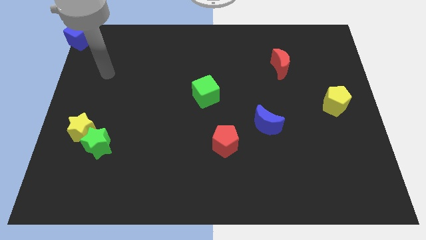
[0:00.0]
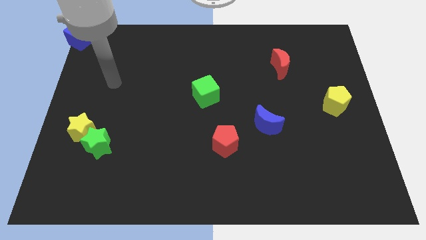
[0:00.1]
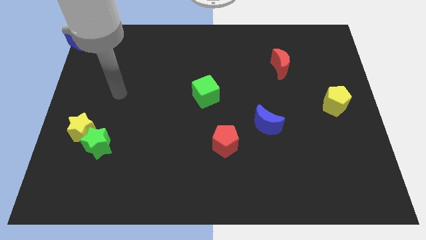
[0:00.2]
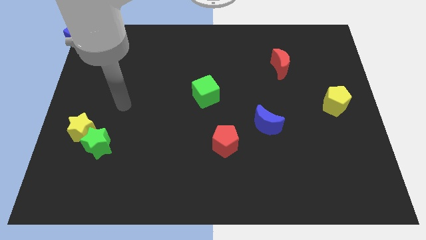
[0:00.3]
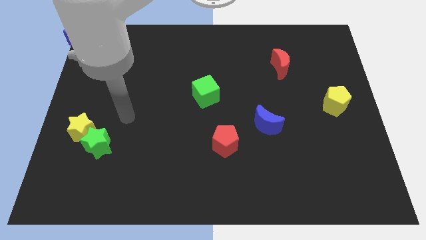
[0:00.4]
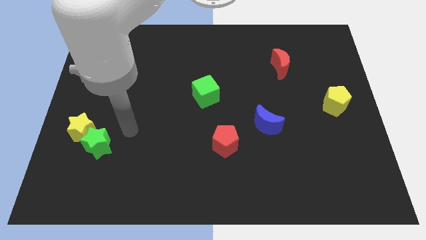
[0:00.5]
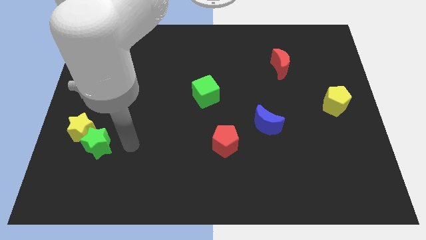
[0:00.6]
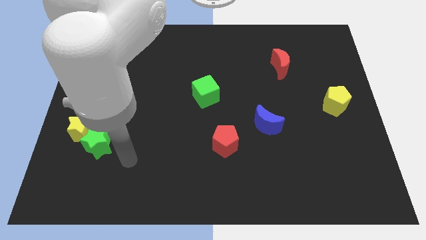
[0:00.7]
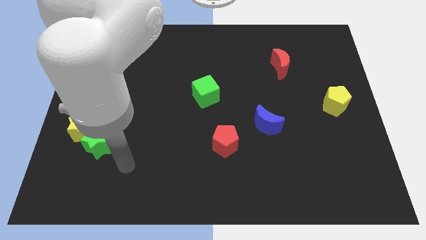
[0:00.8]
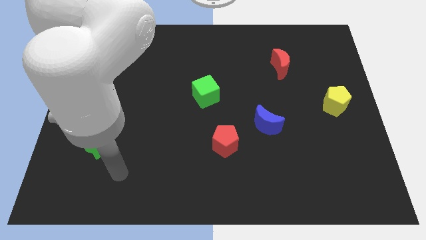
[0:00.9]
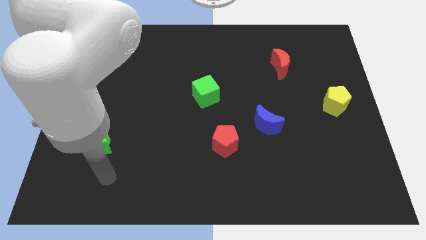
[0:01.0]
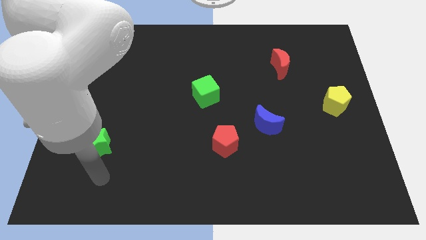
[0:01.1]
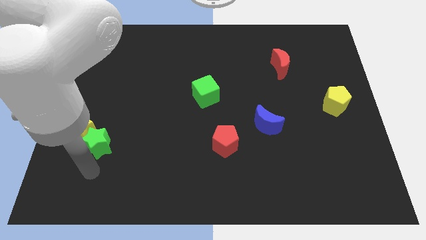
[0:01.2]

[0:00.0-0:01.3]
point your arm at the bottom of the green star

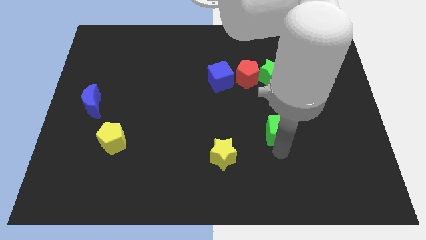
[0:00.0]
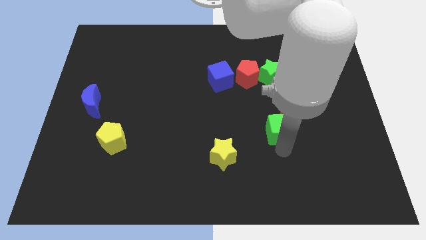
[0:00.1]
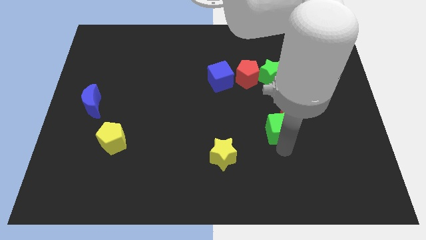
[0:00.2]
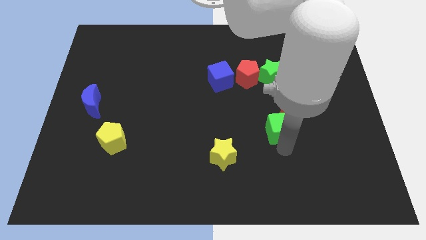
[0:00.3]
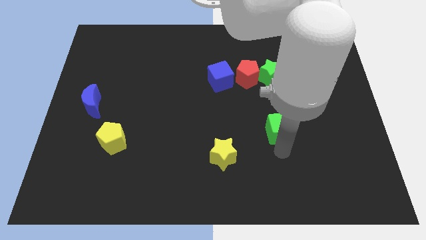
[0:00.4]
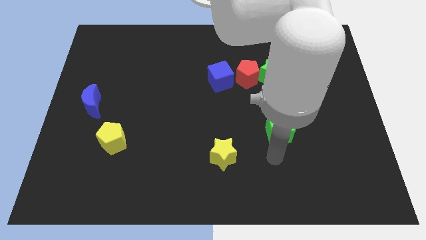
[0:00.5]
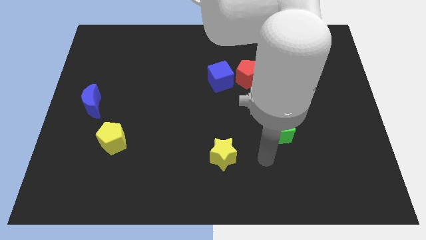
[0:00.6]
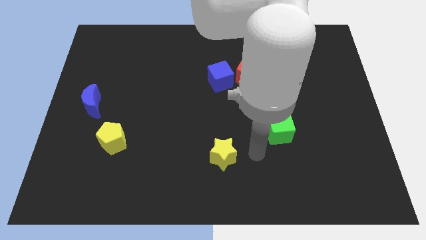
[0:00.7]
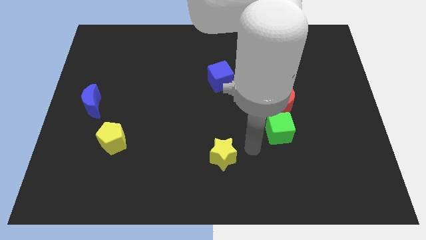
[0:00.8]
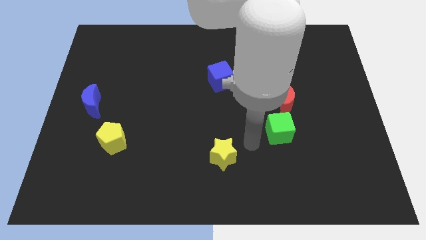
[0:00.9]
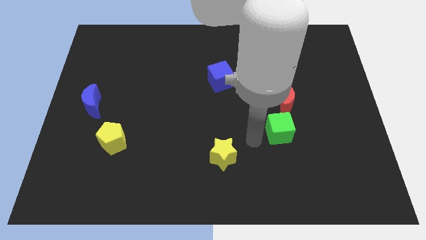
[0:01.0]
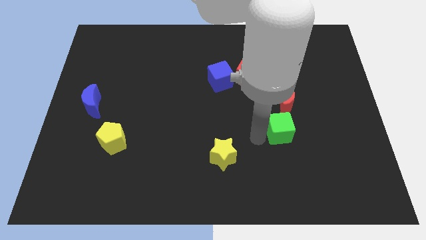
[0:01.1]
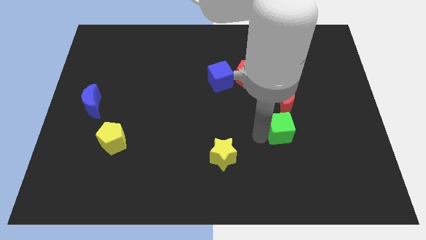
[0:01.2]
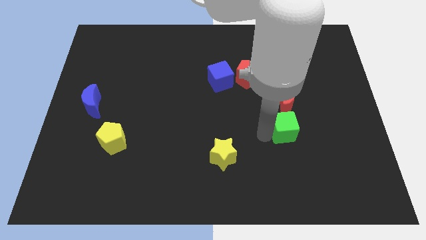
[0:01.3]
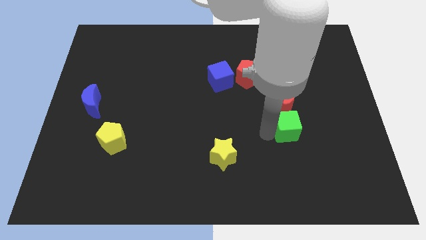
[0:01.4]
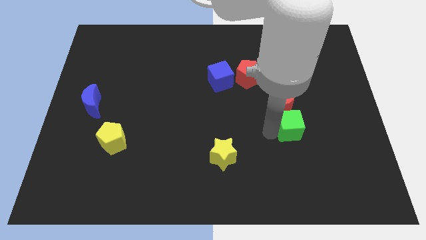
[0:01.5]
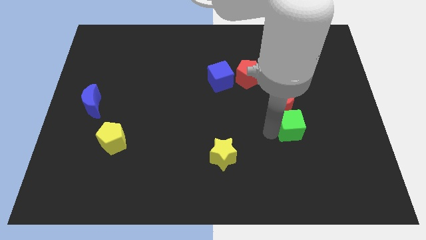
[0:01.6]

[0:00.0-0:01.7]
push the green cube below the red crescent

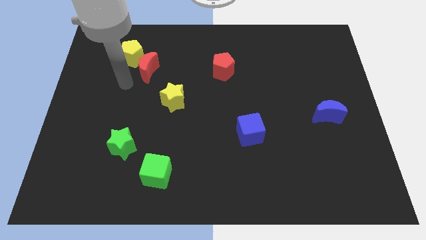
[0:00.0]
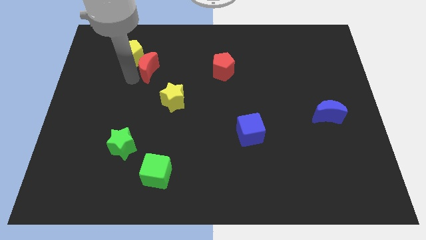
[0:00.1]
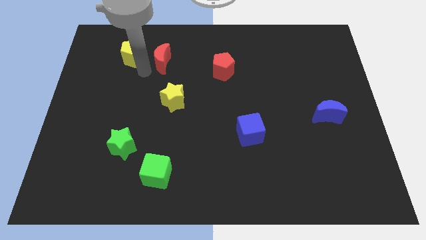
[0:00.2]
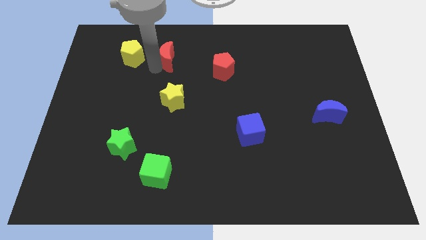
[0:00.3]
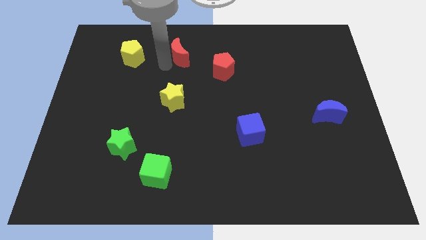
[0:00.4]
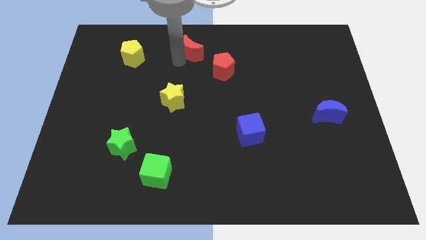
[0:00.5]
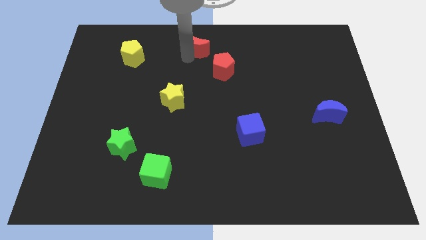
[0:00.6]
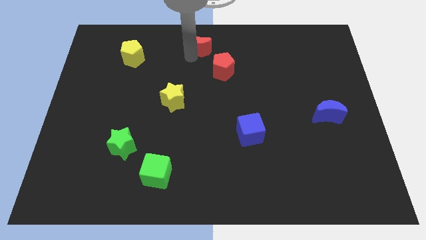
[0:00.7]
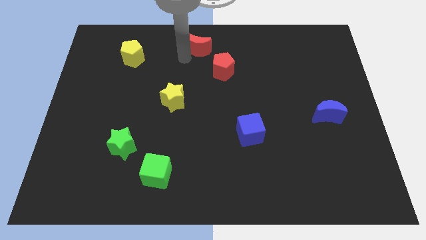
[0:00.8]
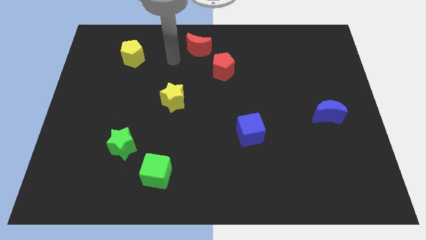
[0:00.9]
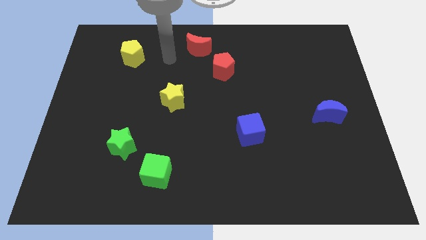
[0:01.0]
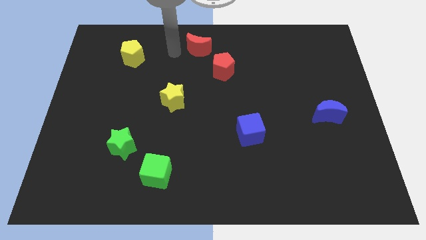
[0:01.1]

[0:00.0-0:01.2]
move the red crescent to the top center of the board

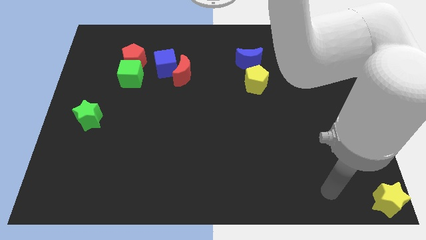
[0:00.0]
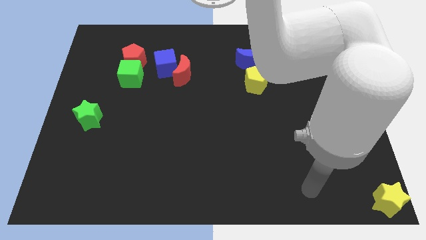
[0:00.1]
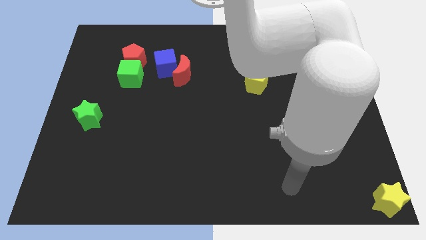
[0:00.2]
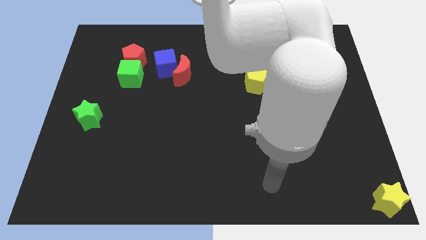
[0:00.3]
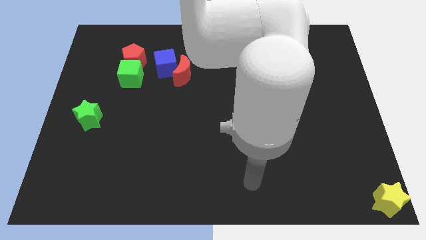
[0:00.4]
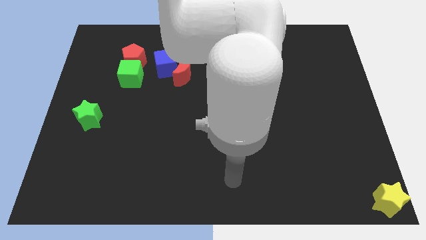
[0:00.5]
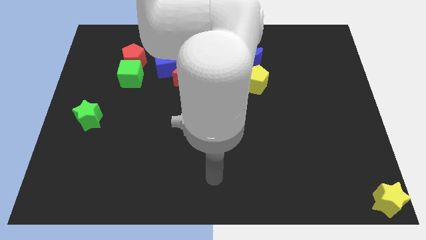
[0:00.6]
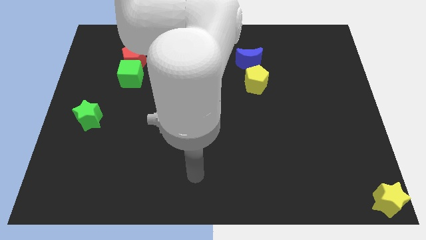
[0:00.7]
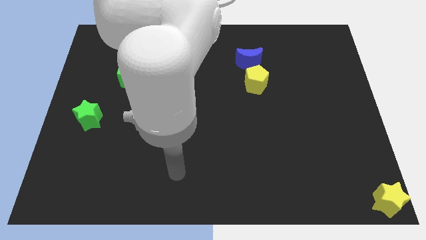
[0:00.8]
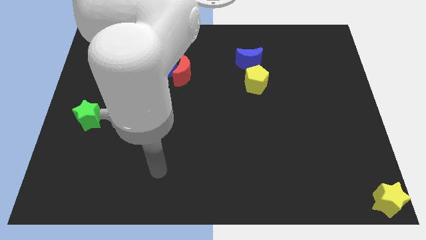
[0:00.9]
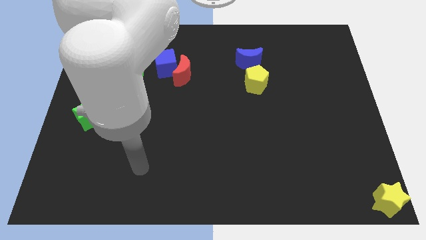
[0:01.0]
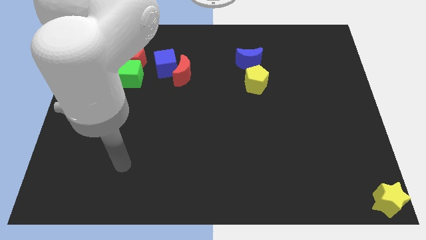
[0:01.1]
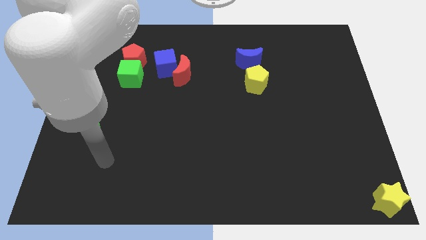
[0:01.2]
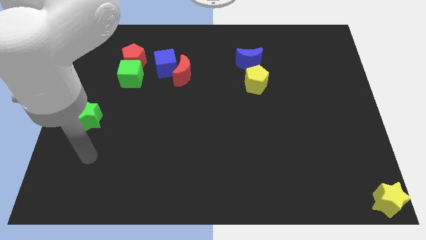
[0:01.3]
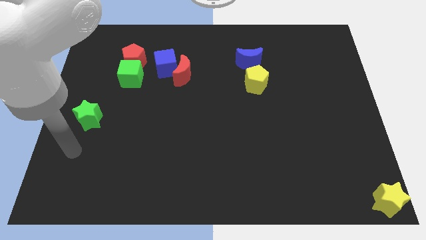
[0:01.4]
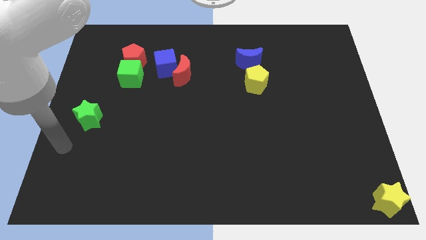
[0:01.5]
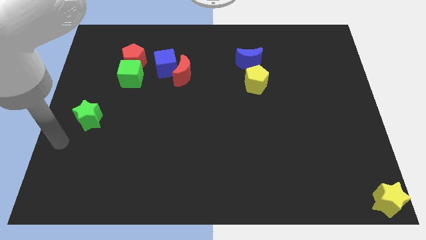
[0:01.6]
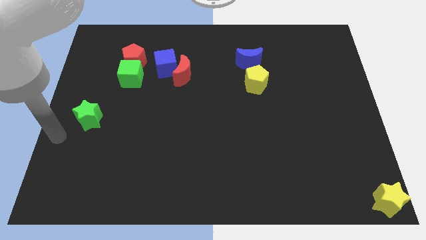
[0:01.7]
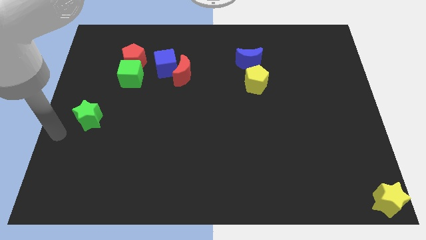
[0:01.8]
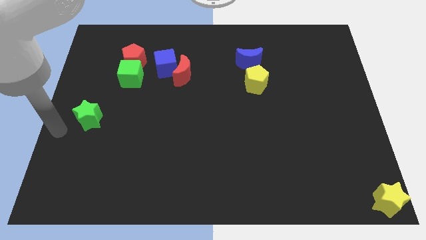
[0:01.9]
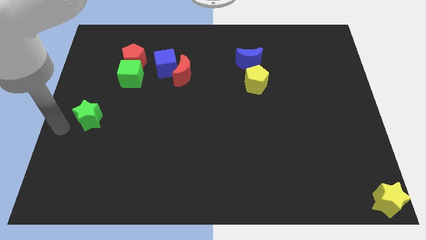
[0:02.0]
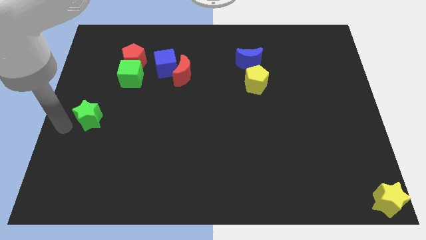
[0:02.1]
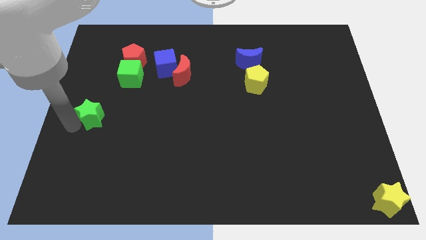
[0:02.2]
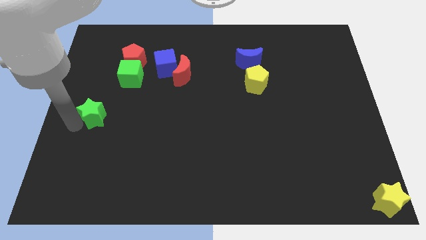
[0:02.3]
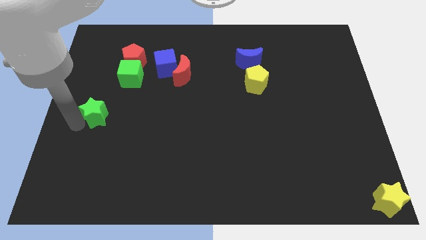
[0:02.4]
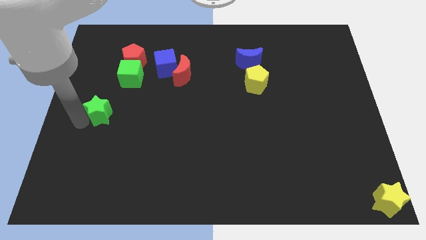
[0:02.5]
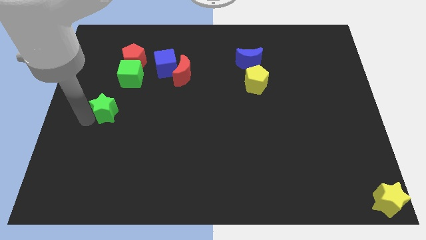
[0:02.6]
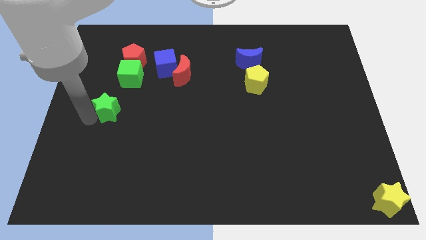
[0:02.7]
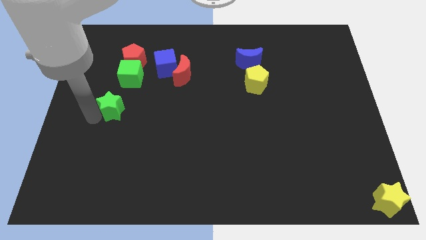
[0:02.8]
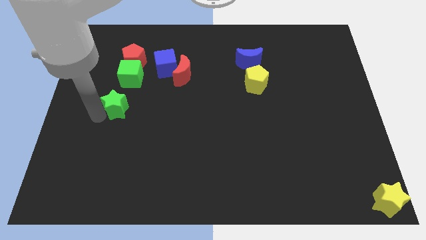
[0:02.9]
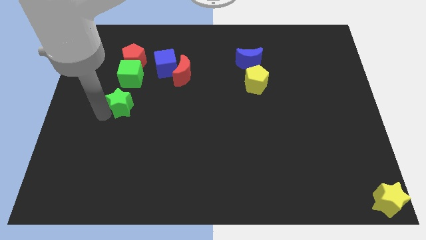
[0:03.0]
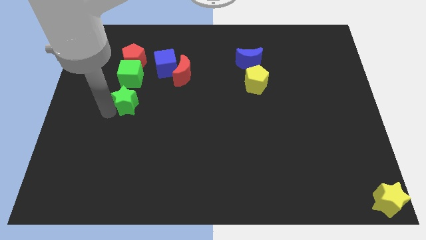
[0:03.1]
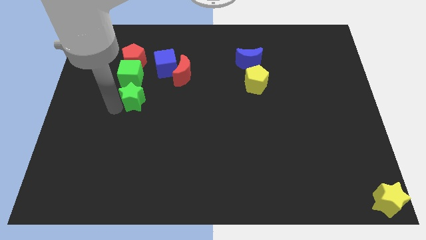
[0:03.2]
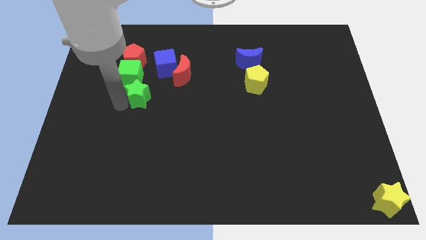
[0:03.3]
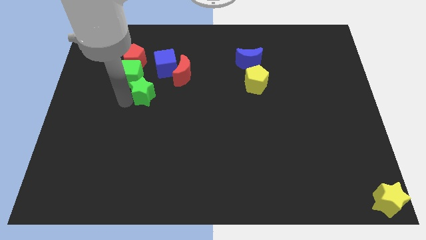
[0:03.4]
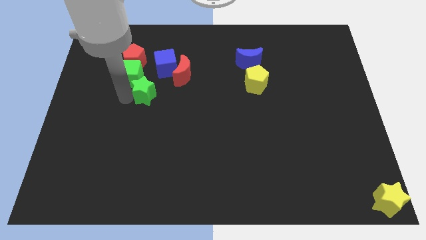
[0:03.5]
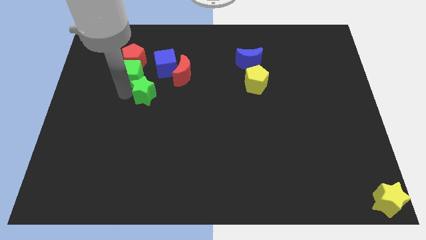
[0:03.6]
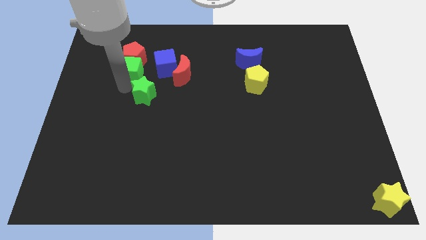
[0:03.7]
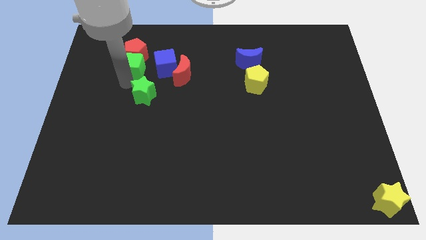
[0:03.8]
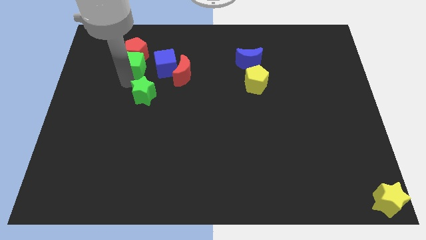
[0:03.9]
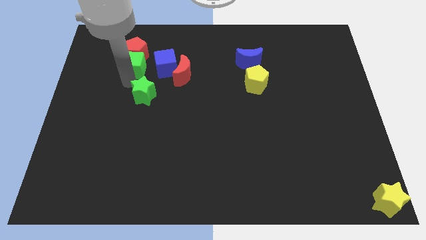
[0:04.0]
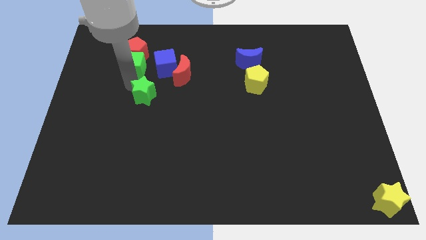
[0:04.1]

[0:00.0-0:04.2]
move the green star to the bottom of the green cube

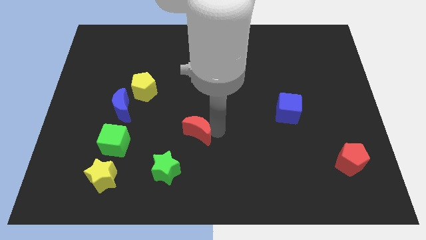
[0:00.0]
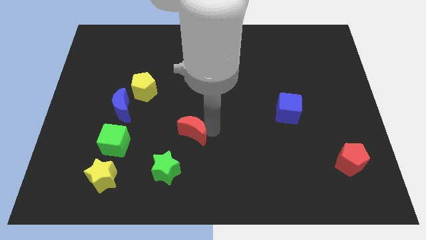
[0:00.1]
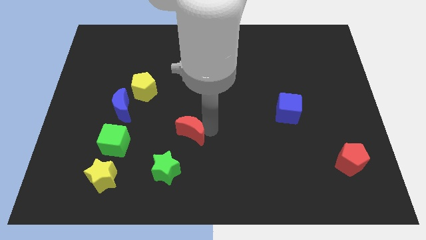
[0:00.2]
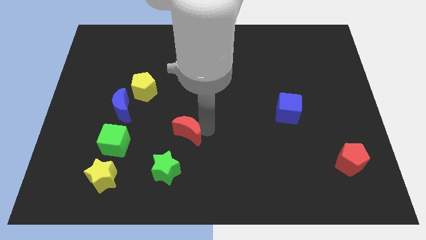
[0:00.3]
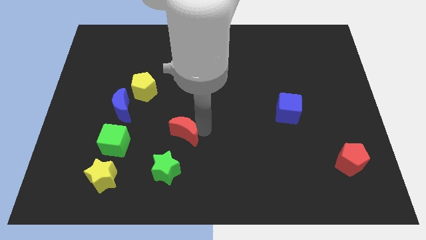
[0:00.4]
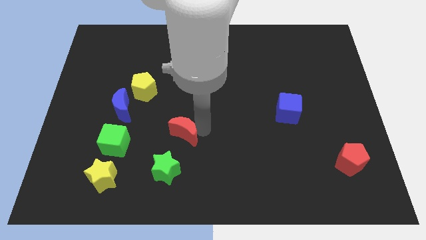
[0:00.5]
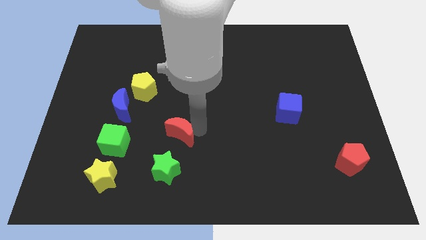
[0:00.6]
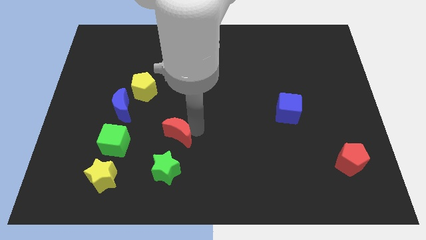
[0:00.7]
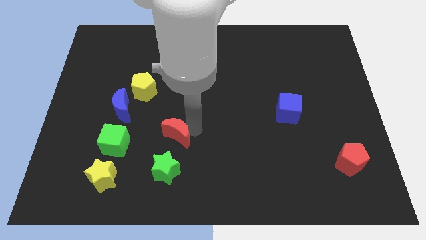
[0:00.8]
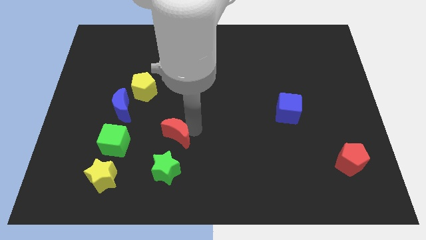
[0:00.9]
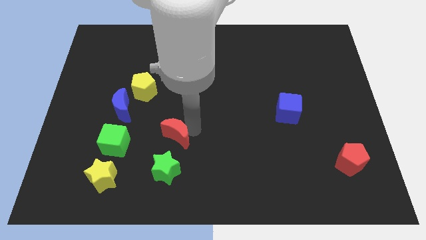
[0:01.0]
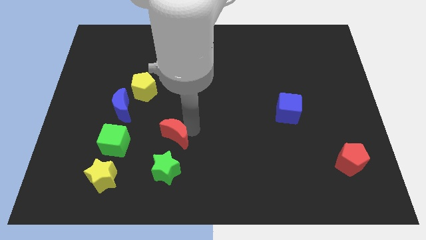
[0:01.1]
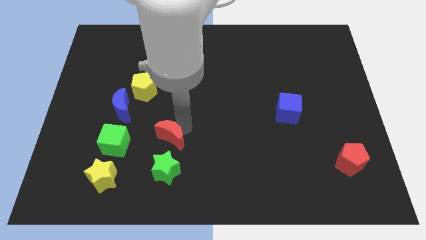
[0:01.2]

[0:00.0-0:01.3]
place the red crescent above the green star
